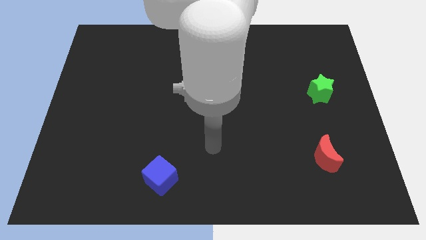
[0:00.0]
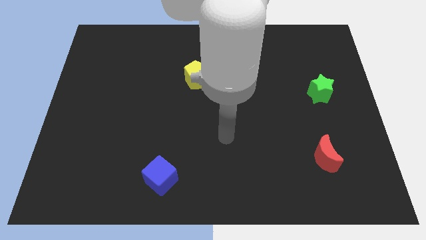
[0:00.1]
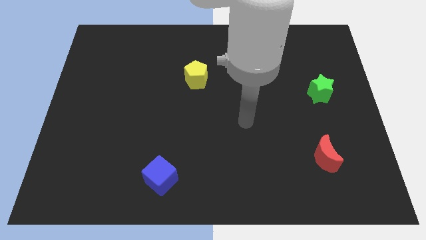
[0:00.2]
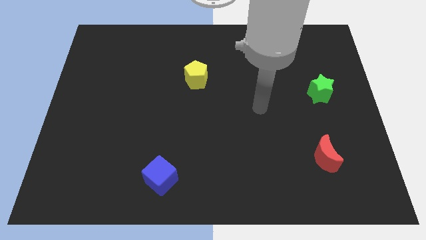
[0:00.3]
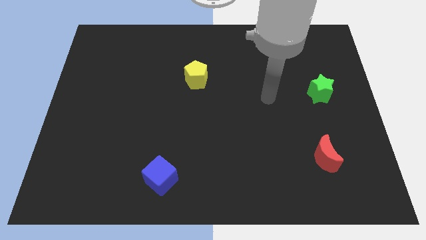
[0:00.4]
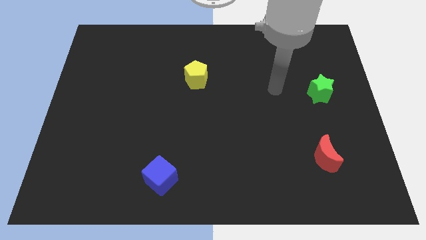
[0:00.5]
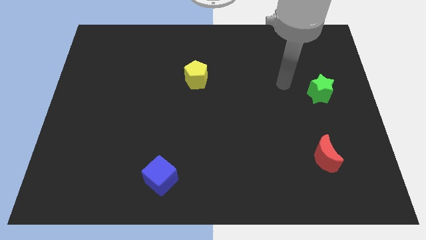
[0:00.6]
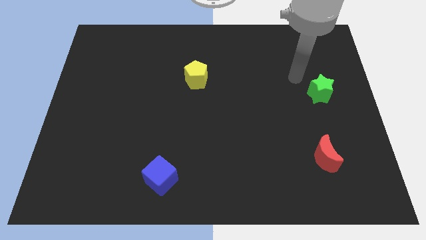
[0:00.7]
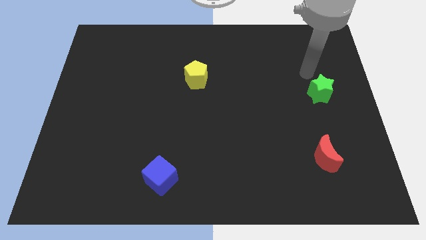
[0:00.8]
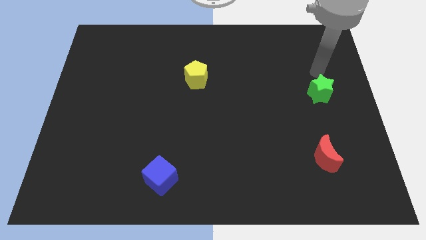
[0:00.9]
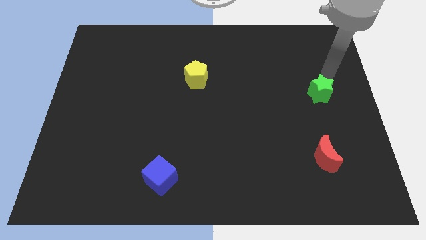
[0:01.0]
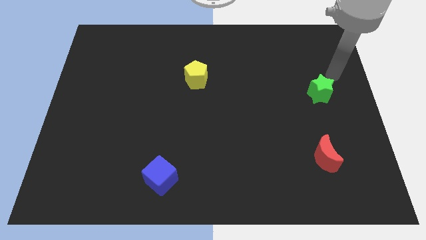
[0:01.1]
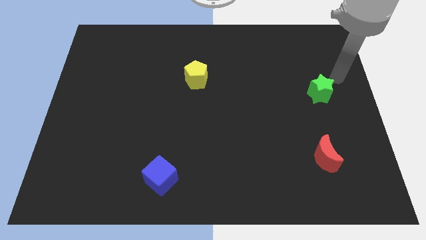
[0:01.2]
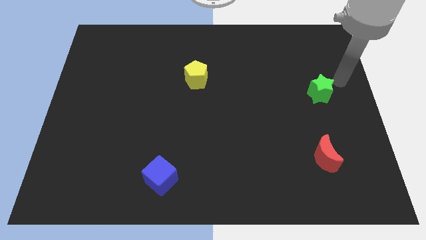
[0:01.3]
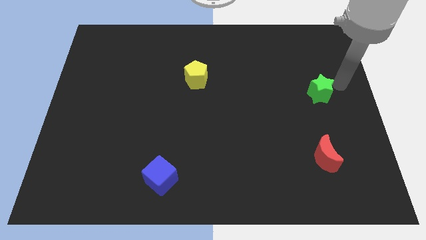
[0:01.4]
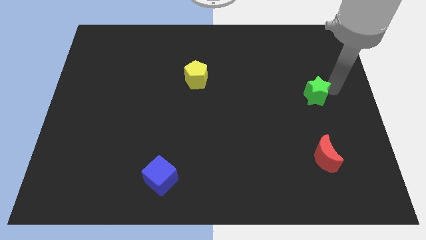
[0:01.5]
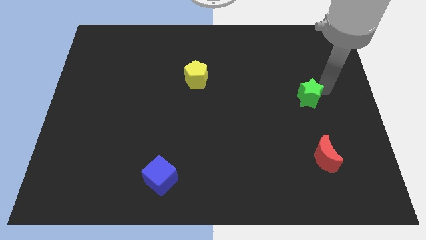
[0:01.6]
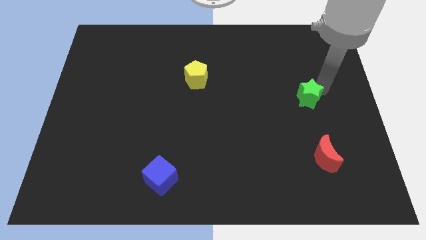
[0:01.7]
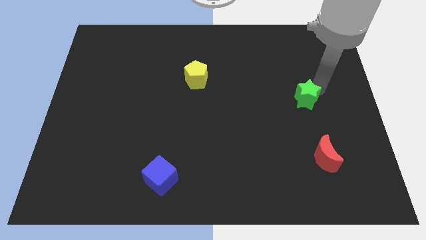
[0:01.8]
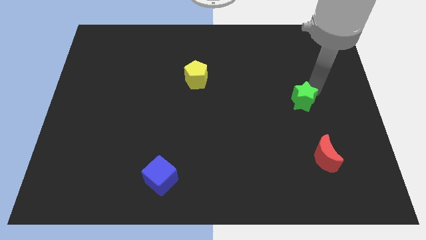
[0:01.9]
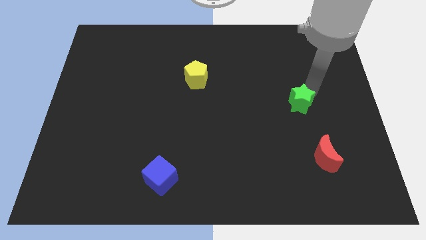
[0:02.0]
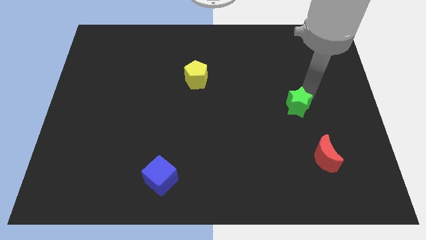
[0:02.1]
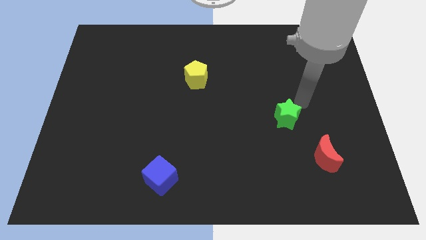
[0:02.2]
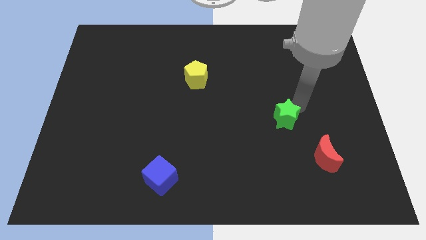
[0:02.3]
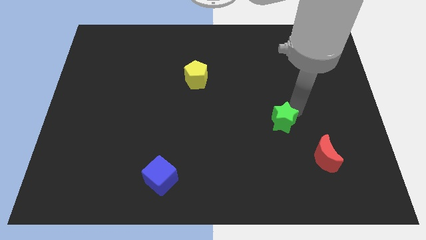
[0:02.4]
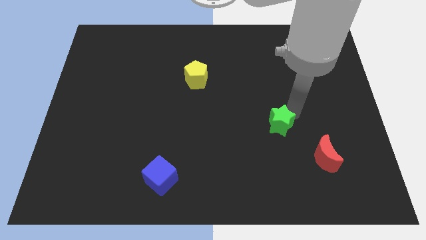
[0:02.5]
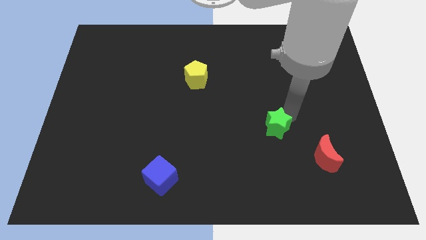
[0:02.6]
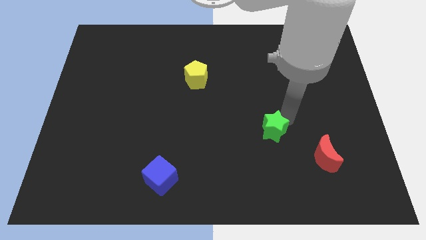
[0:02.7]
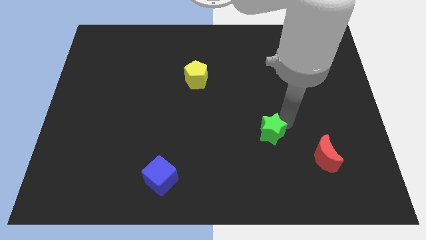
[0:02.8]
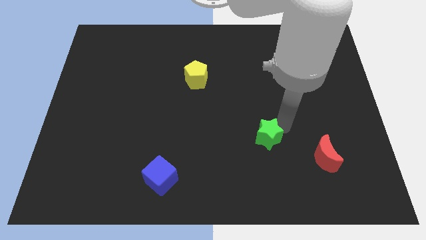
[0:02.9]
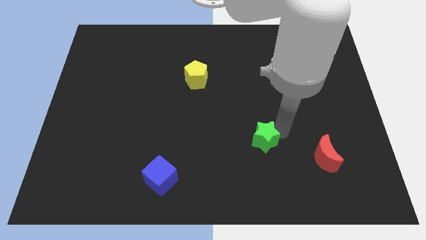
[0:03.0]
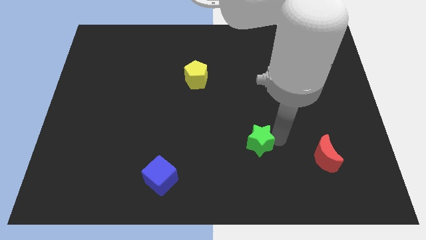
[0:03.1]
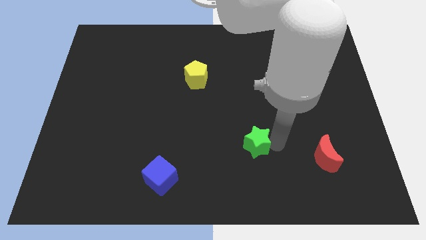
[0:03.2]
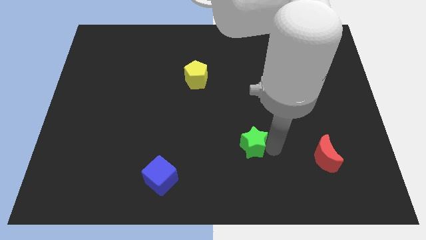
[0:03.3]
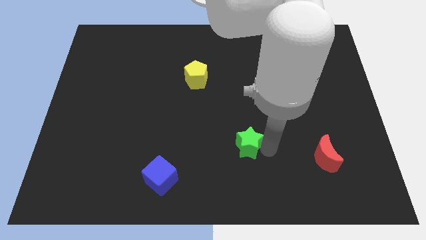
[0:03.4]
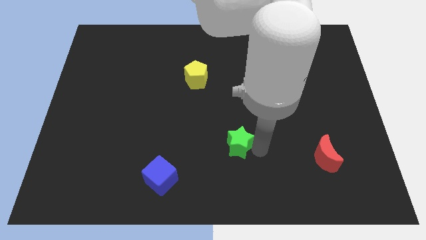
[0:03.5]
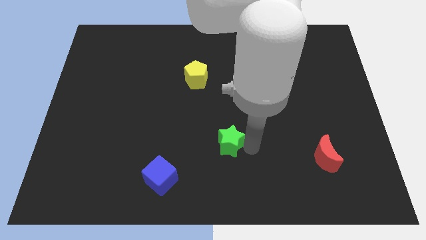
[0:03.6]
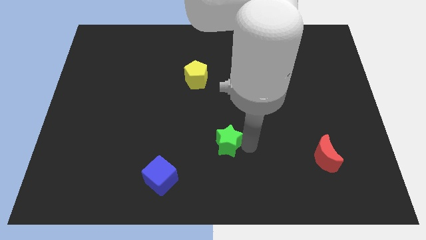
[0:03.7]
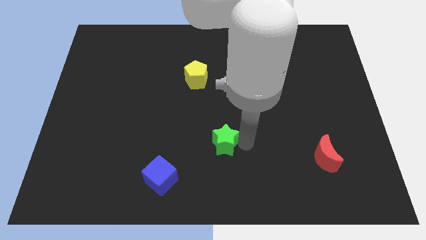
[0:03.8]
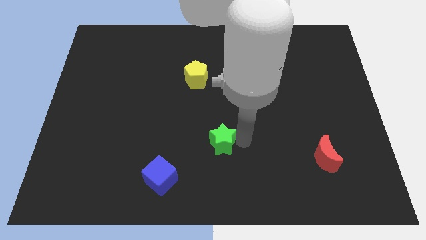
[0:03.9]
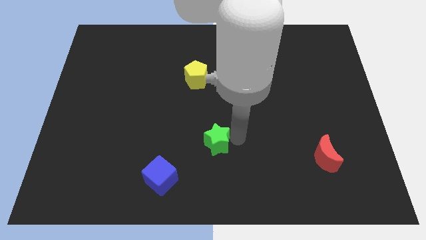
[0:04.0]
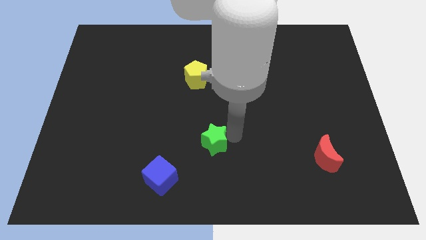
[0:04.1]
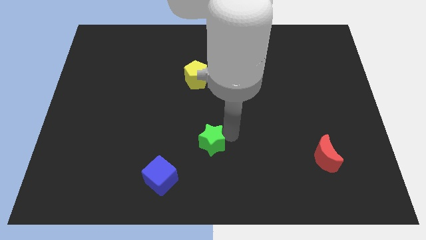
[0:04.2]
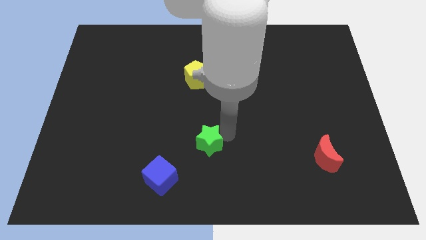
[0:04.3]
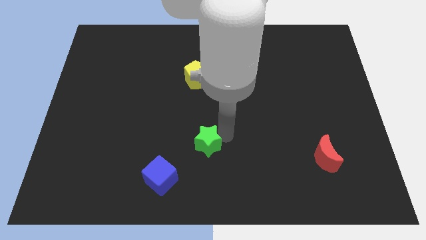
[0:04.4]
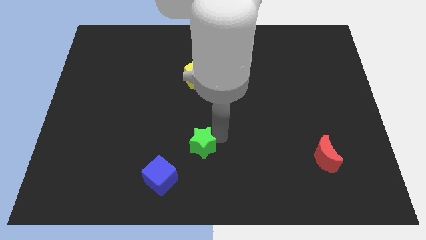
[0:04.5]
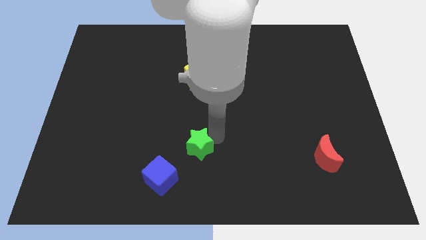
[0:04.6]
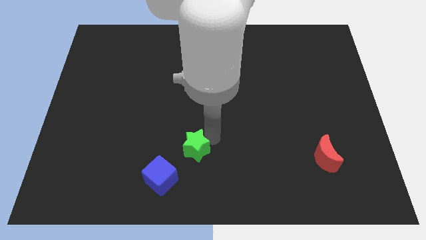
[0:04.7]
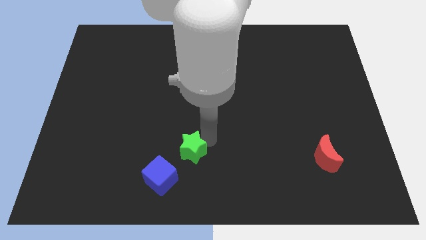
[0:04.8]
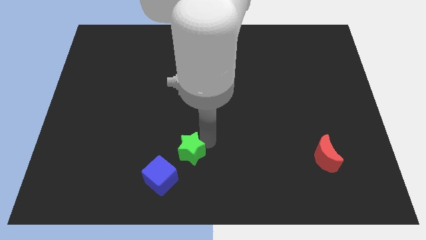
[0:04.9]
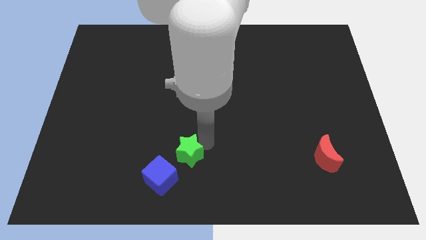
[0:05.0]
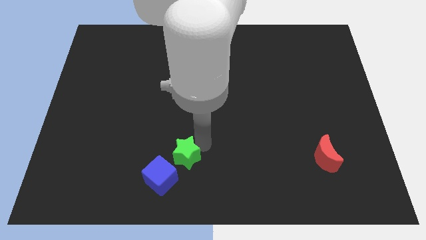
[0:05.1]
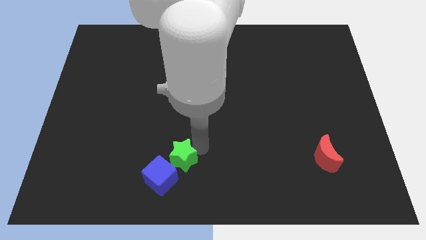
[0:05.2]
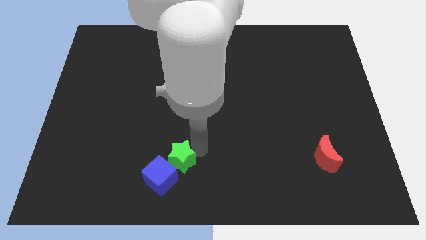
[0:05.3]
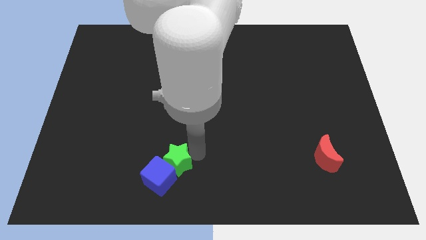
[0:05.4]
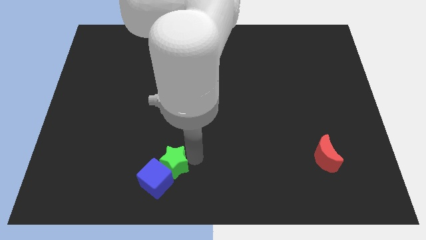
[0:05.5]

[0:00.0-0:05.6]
push the green block towards the blue cube

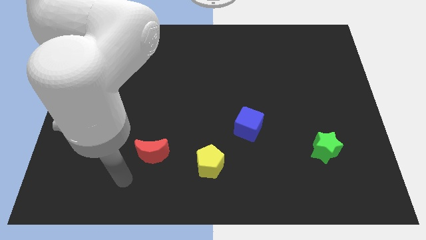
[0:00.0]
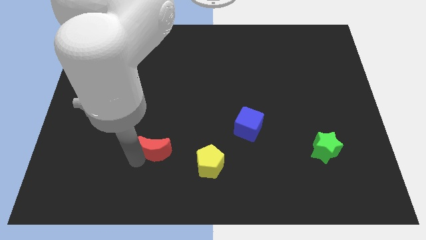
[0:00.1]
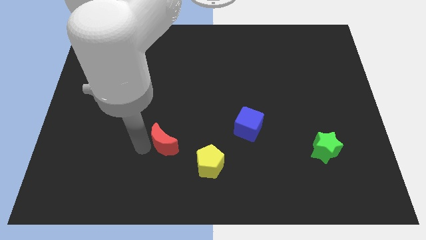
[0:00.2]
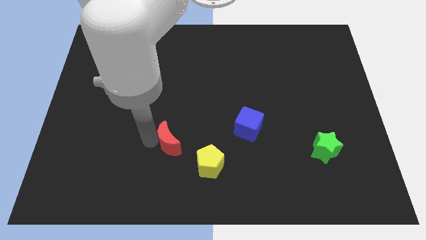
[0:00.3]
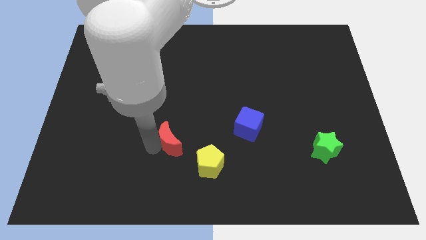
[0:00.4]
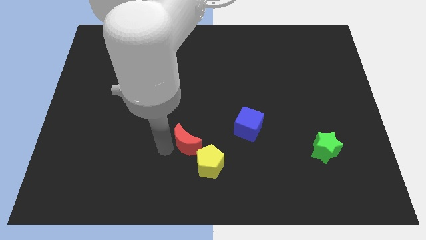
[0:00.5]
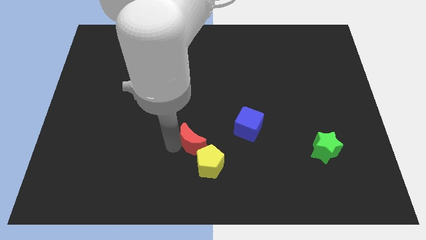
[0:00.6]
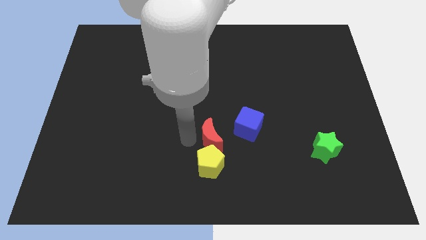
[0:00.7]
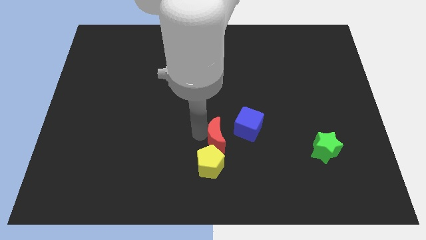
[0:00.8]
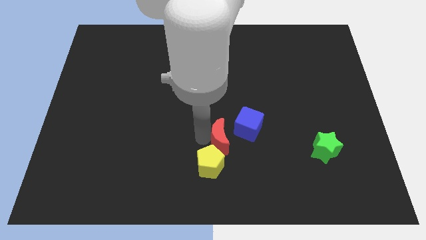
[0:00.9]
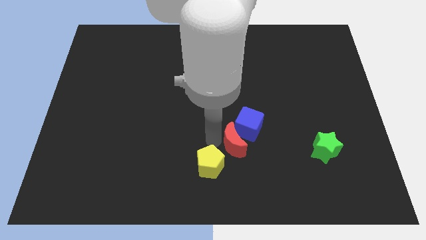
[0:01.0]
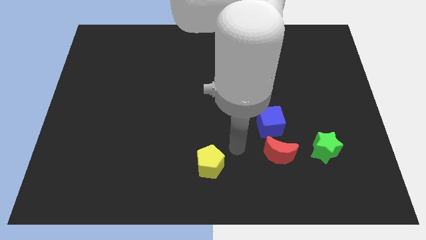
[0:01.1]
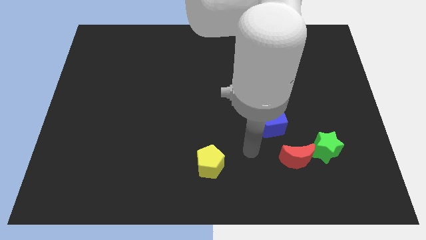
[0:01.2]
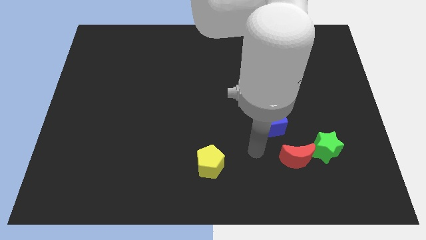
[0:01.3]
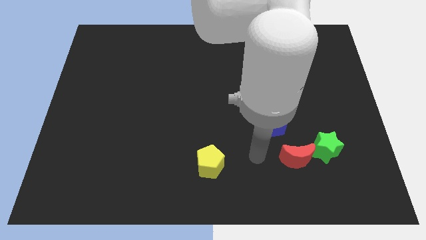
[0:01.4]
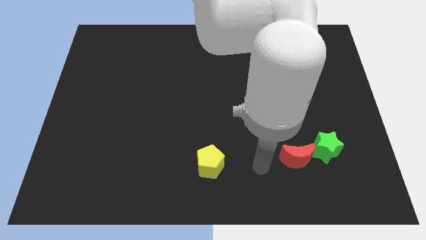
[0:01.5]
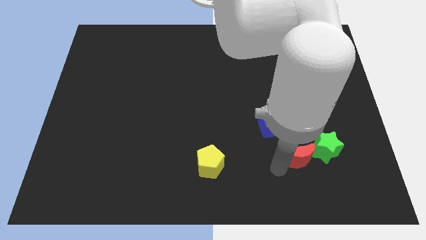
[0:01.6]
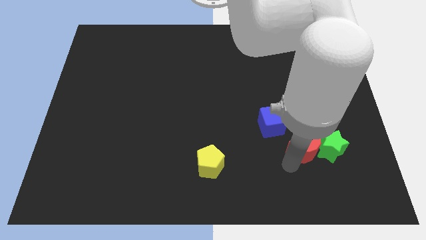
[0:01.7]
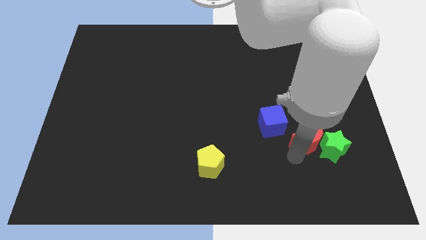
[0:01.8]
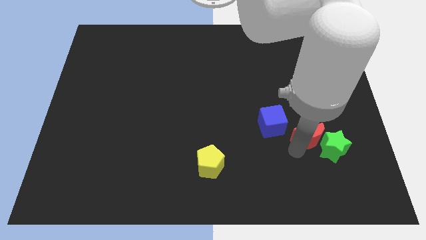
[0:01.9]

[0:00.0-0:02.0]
push the red moon to the green block

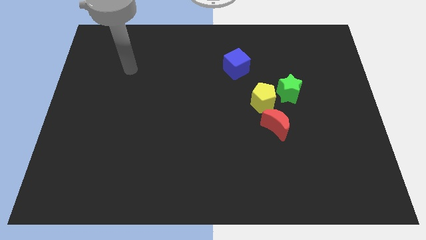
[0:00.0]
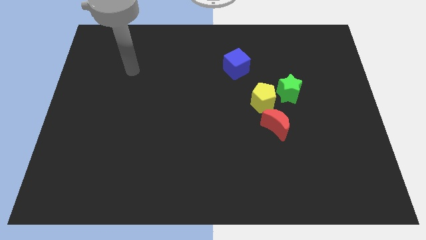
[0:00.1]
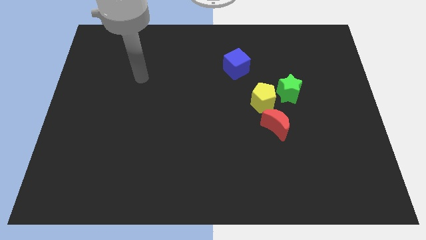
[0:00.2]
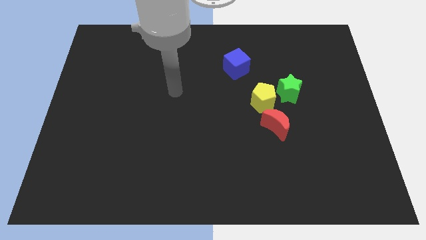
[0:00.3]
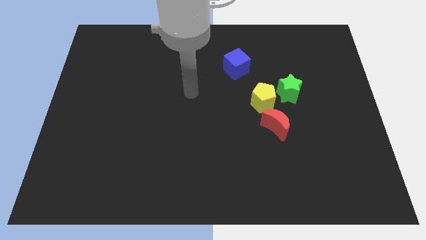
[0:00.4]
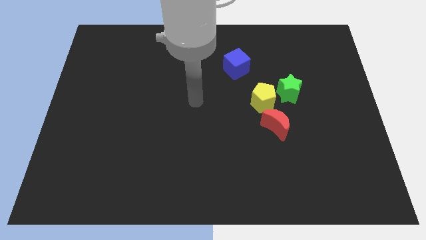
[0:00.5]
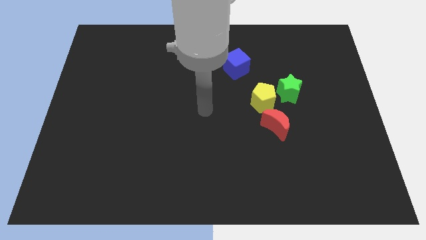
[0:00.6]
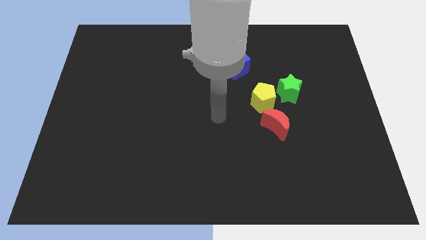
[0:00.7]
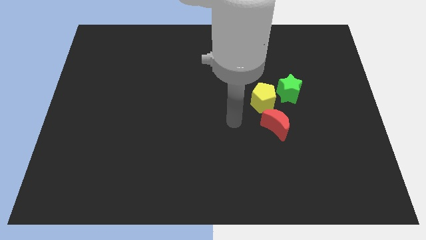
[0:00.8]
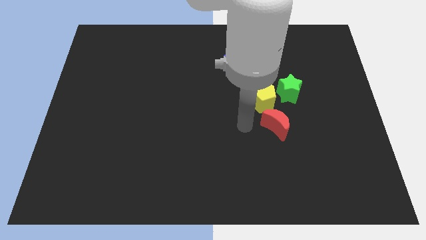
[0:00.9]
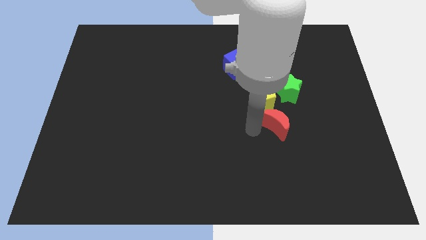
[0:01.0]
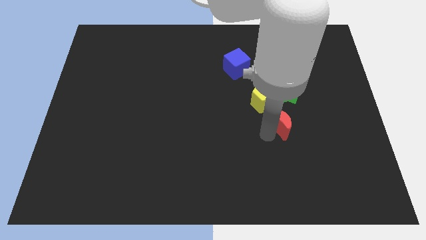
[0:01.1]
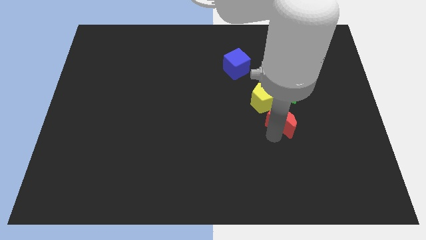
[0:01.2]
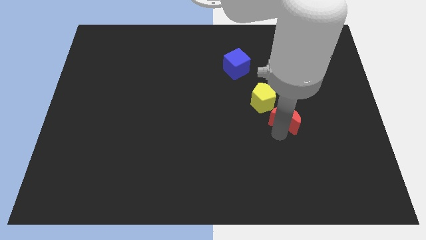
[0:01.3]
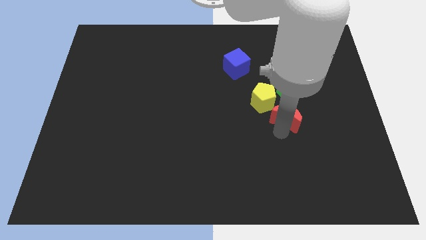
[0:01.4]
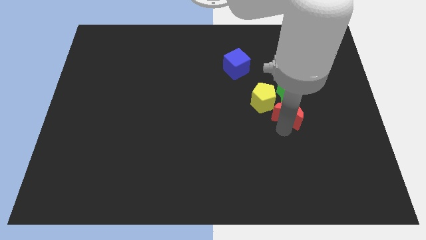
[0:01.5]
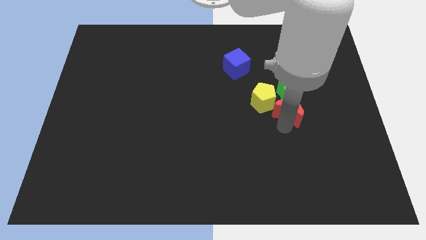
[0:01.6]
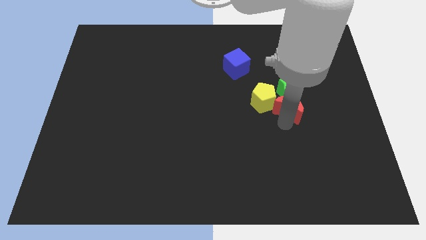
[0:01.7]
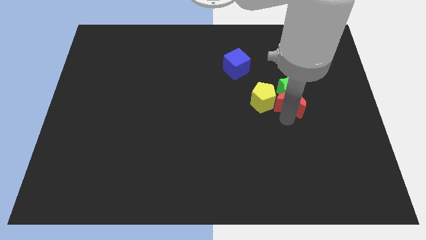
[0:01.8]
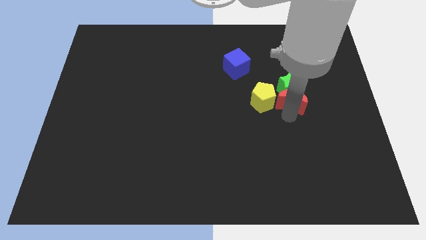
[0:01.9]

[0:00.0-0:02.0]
slide the moon to the green star
